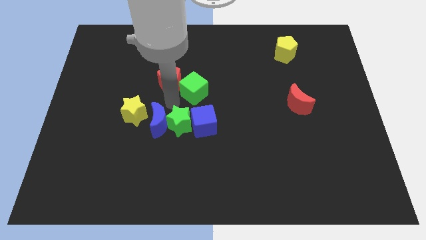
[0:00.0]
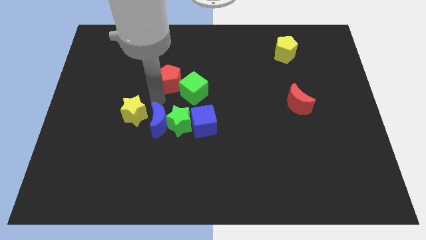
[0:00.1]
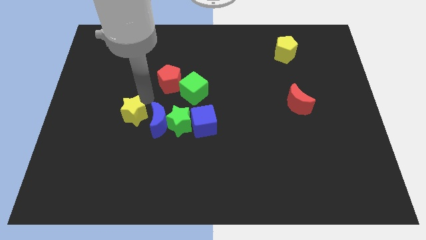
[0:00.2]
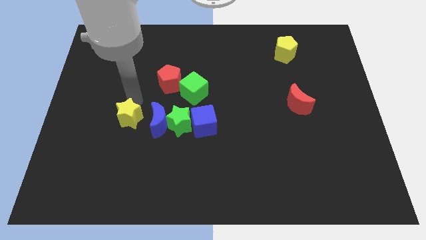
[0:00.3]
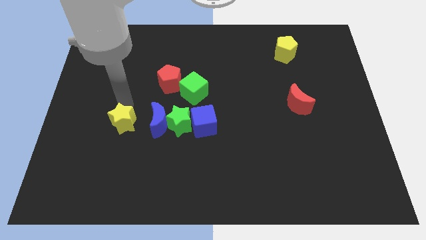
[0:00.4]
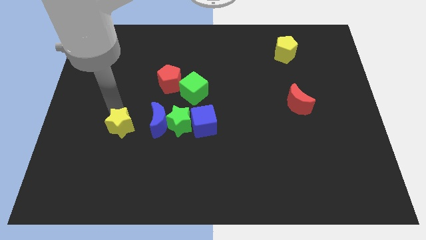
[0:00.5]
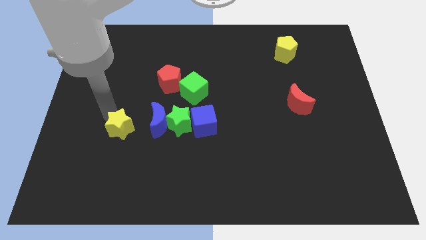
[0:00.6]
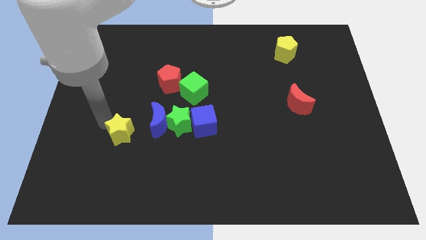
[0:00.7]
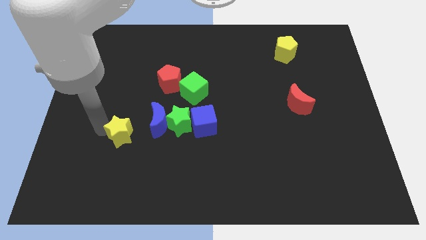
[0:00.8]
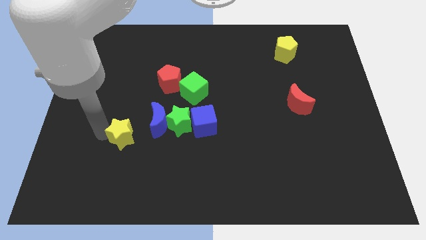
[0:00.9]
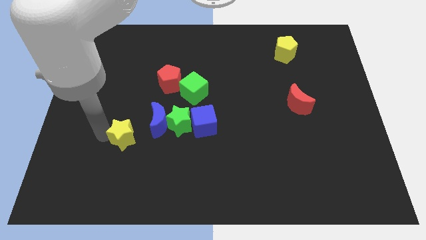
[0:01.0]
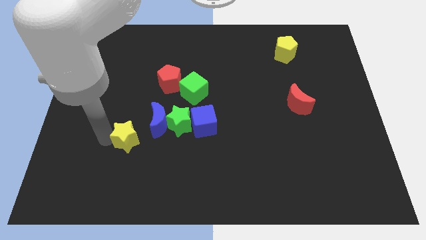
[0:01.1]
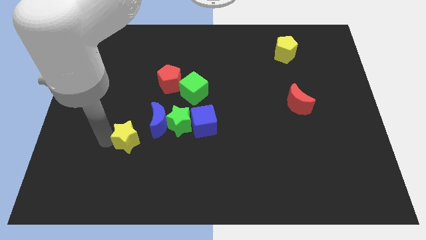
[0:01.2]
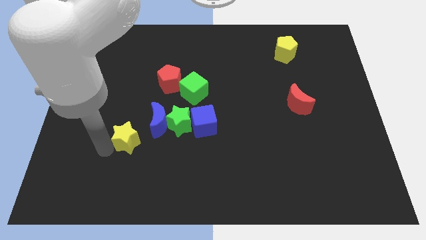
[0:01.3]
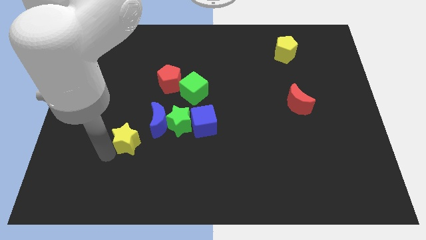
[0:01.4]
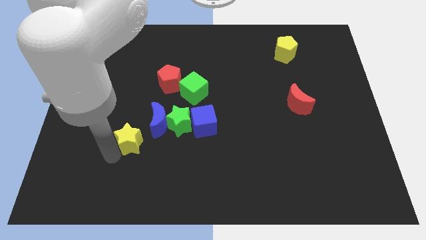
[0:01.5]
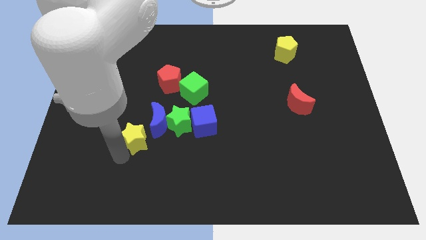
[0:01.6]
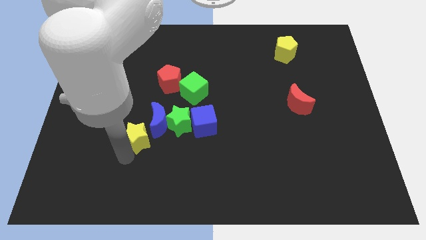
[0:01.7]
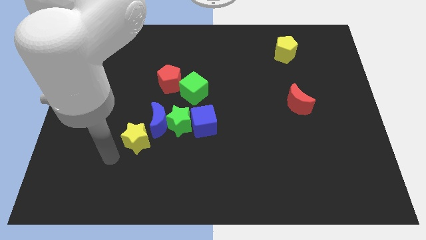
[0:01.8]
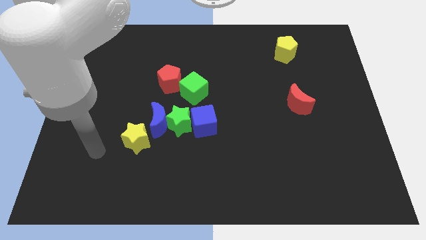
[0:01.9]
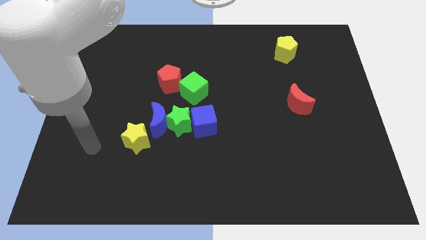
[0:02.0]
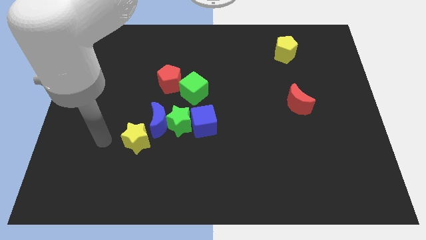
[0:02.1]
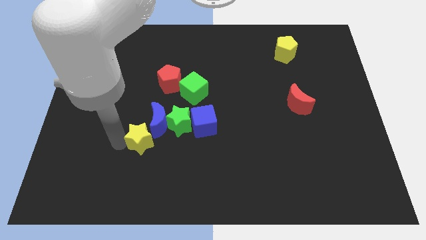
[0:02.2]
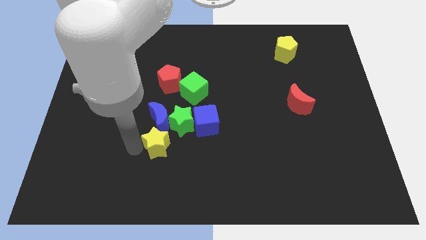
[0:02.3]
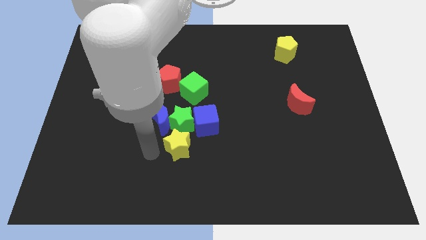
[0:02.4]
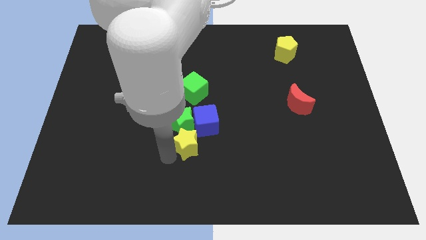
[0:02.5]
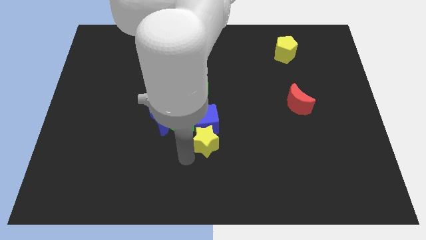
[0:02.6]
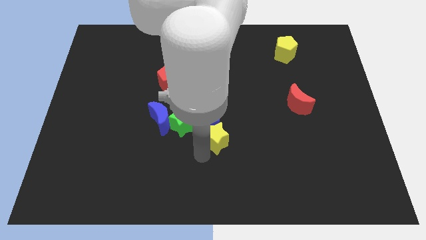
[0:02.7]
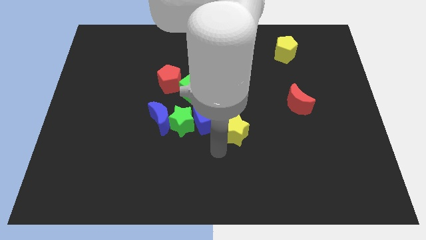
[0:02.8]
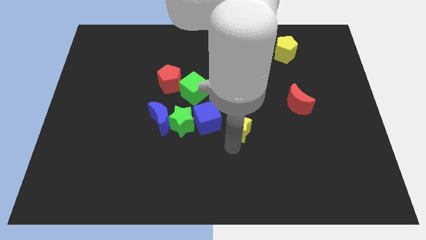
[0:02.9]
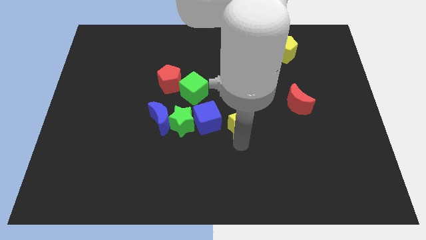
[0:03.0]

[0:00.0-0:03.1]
separate yellow star from blue moon

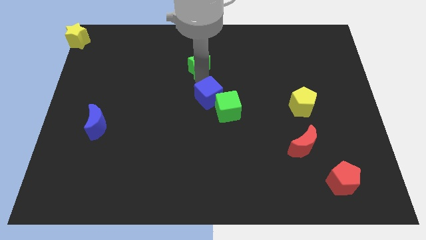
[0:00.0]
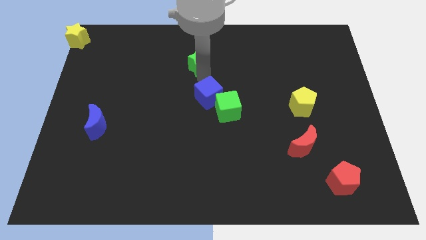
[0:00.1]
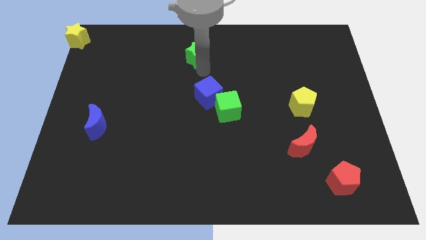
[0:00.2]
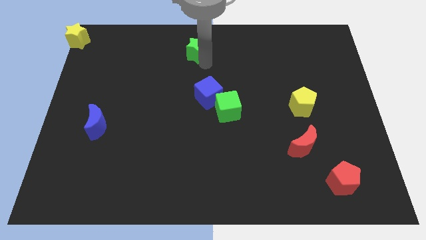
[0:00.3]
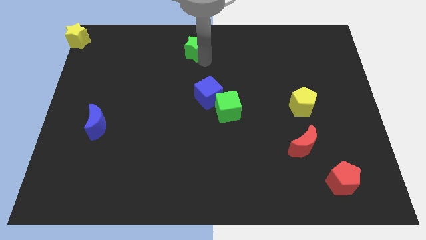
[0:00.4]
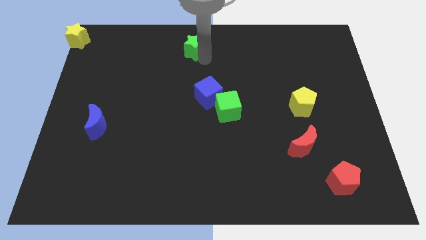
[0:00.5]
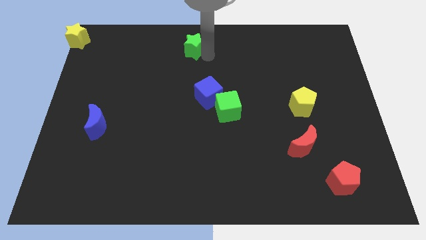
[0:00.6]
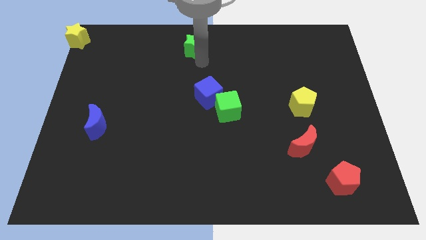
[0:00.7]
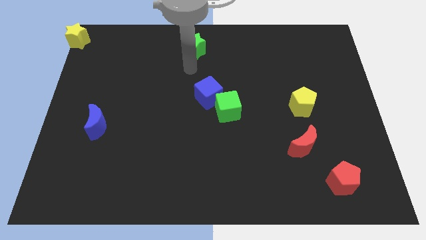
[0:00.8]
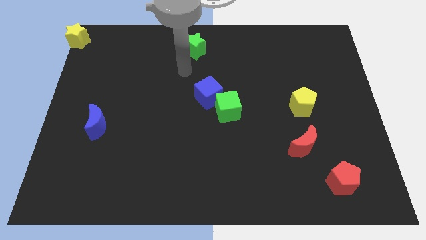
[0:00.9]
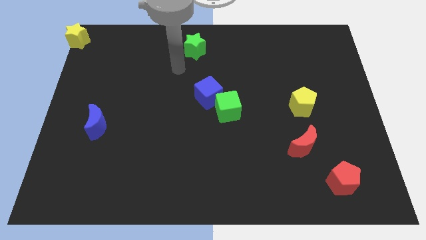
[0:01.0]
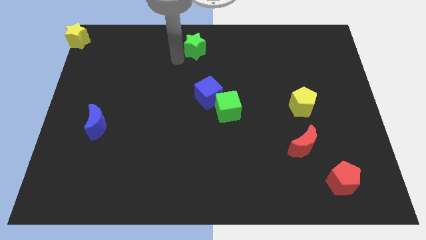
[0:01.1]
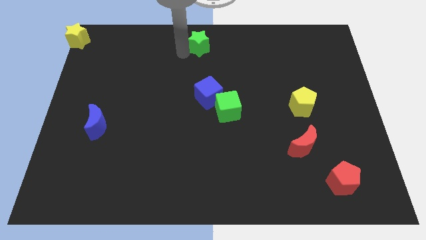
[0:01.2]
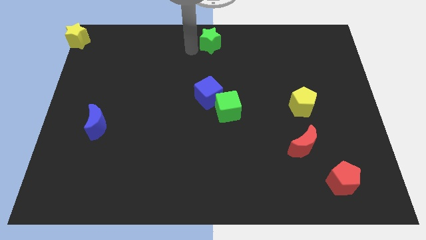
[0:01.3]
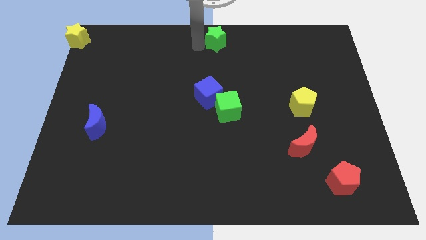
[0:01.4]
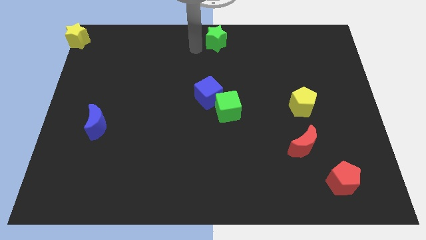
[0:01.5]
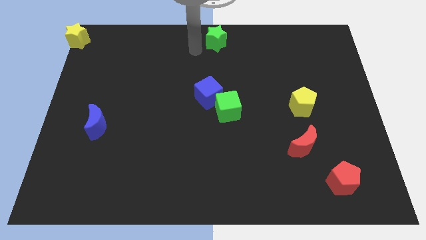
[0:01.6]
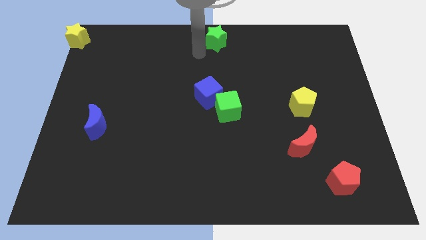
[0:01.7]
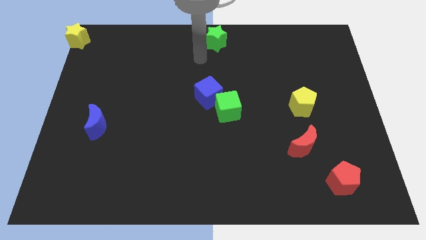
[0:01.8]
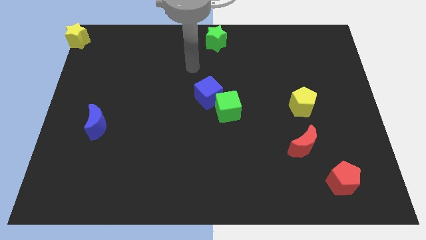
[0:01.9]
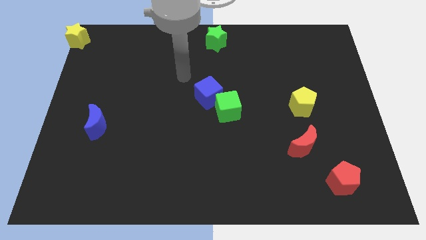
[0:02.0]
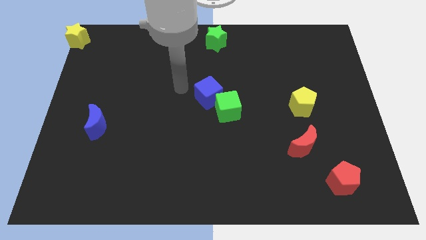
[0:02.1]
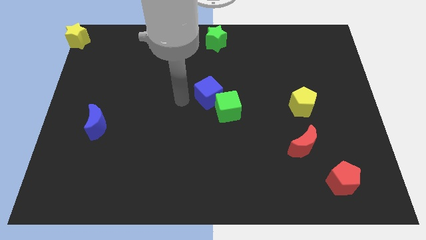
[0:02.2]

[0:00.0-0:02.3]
move the green star to the top centre of the board

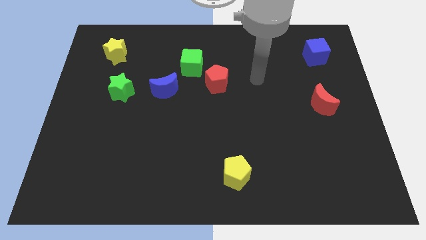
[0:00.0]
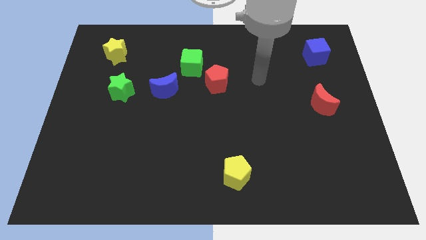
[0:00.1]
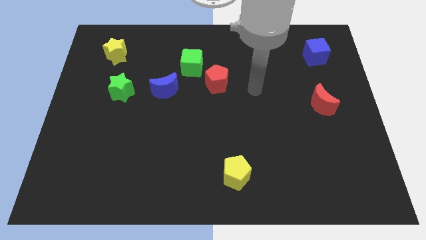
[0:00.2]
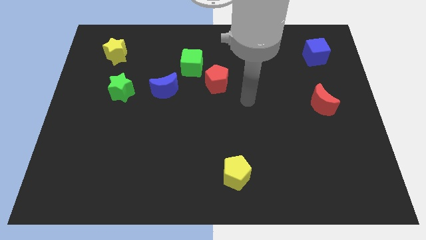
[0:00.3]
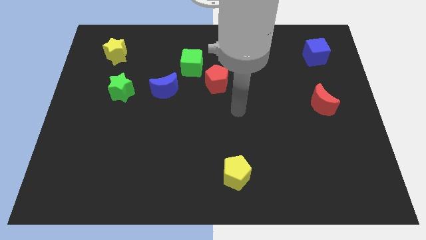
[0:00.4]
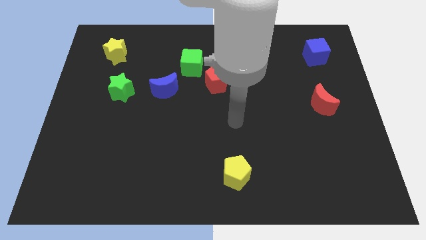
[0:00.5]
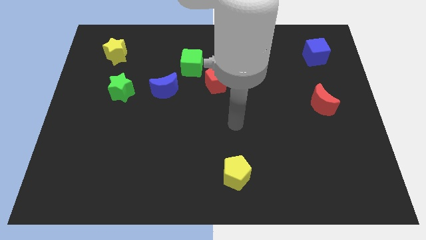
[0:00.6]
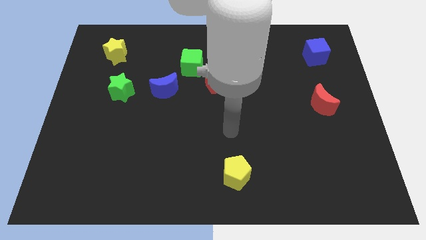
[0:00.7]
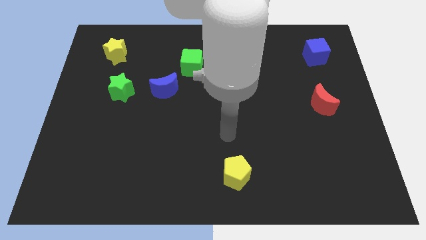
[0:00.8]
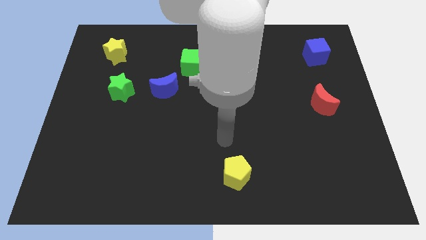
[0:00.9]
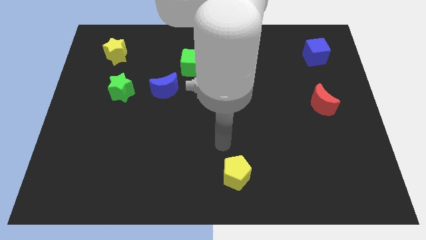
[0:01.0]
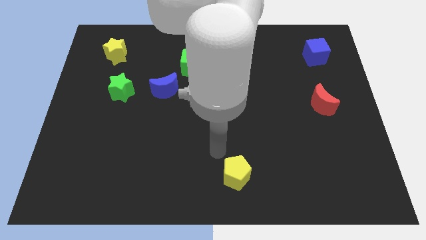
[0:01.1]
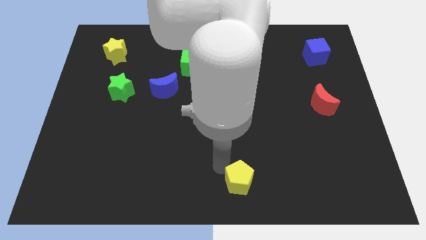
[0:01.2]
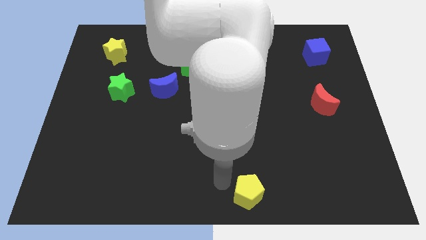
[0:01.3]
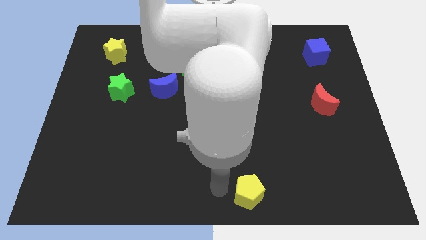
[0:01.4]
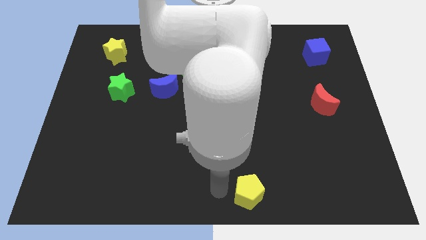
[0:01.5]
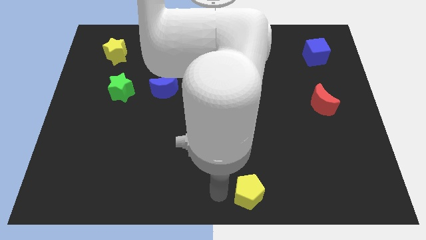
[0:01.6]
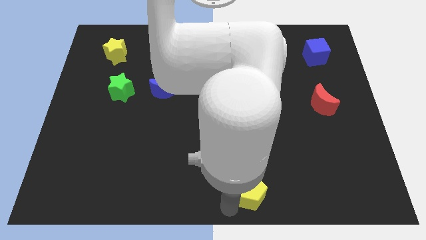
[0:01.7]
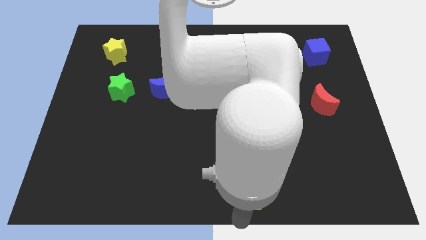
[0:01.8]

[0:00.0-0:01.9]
push the yellow pentagon slightly to the bottom side of the board

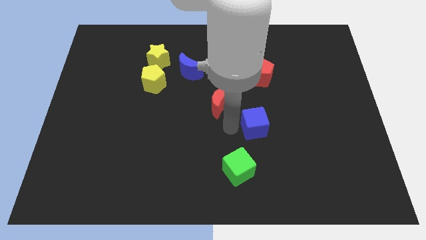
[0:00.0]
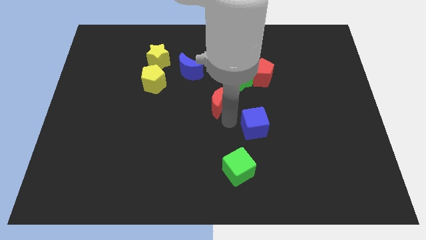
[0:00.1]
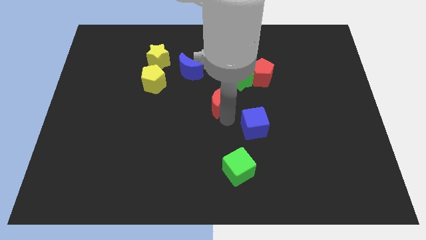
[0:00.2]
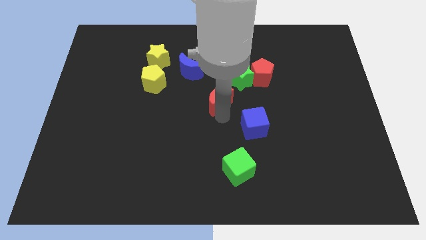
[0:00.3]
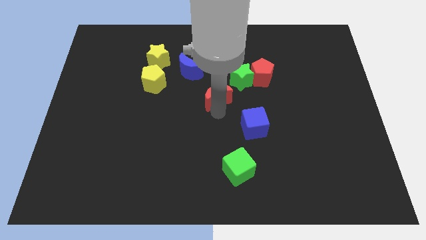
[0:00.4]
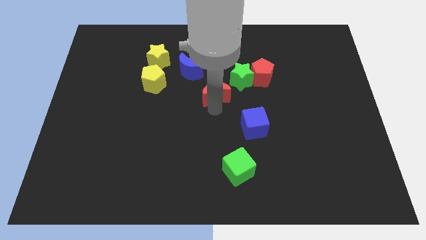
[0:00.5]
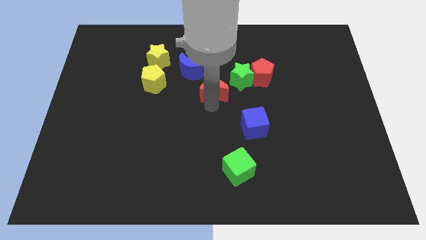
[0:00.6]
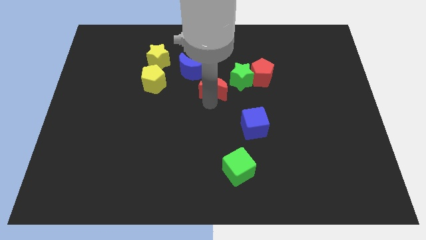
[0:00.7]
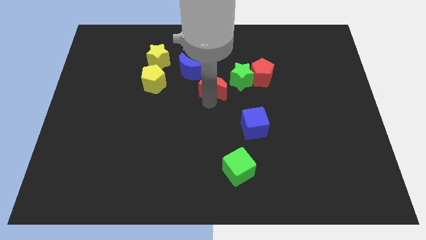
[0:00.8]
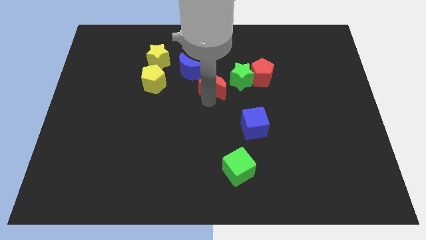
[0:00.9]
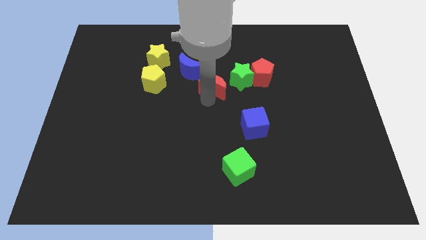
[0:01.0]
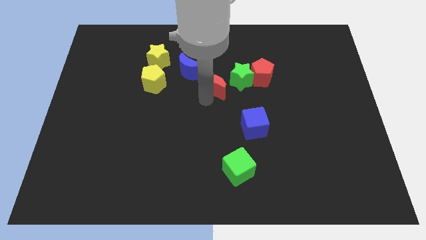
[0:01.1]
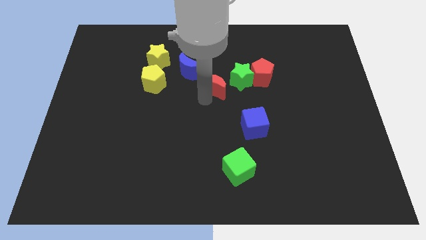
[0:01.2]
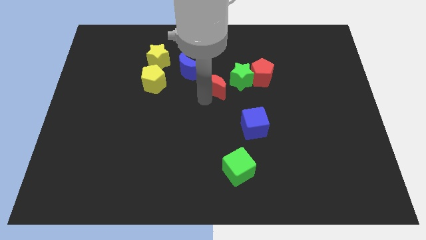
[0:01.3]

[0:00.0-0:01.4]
move red crescent towards the blue crescent
